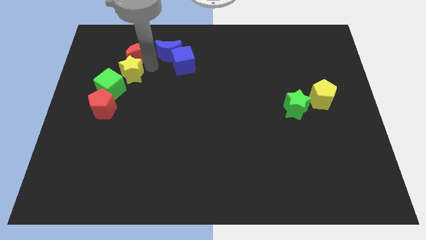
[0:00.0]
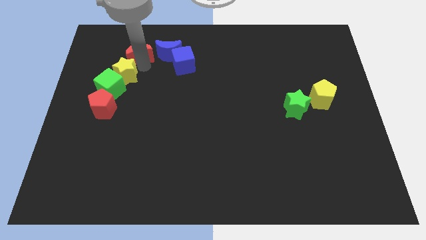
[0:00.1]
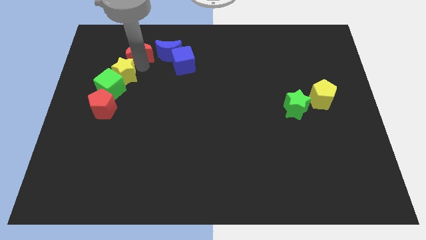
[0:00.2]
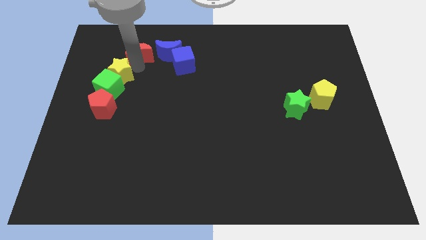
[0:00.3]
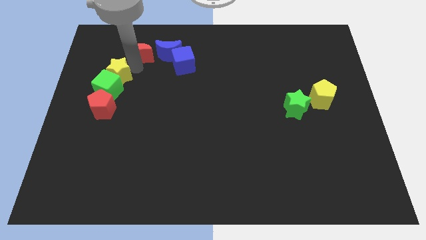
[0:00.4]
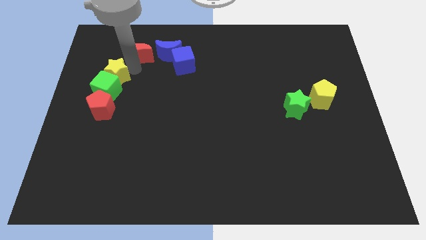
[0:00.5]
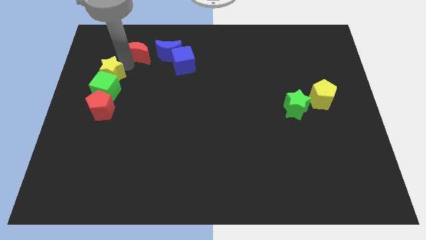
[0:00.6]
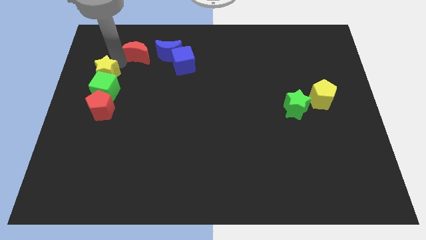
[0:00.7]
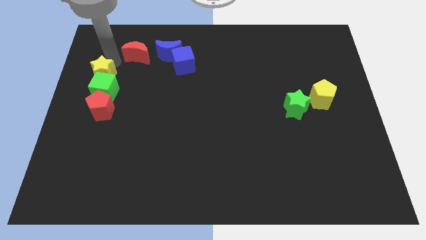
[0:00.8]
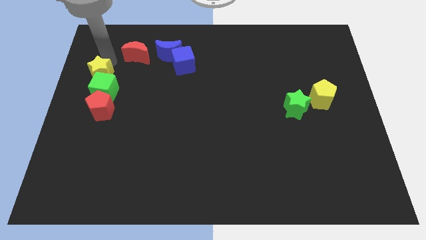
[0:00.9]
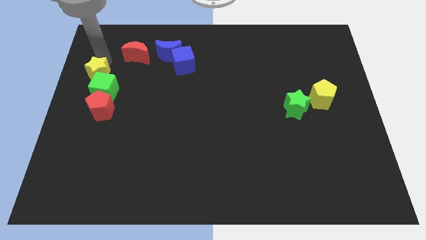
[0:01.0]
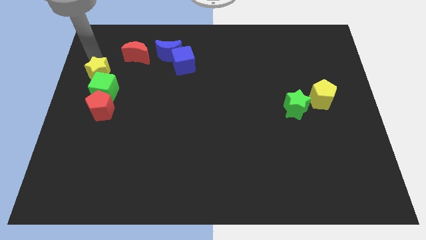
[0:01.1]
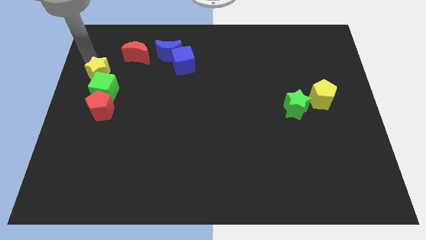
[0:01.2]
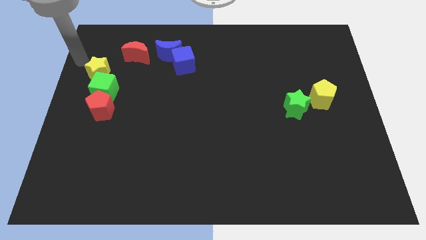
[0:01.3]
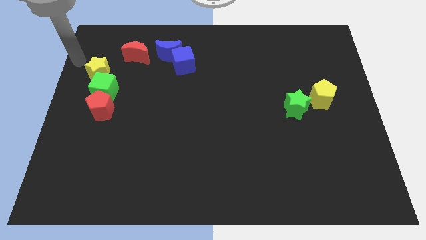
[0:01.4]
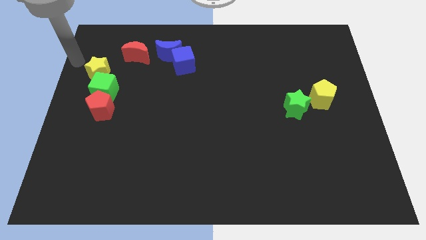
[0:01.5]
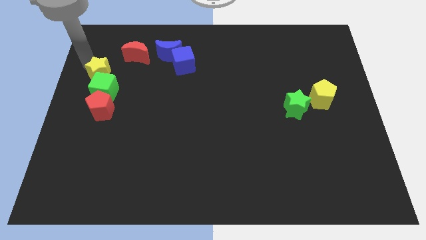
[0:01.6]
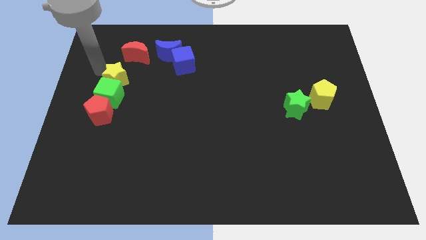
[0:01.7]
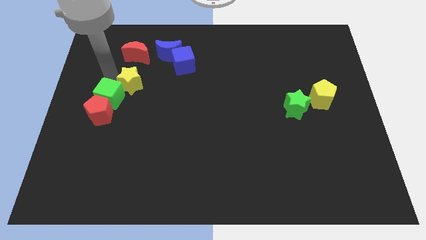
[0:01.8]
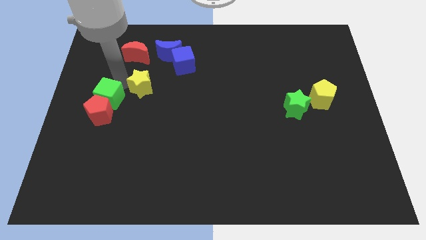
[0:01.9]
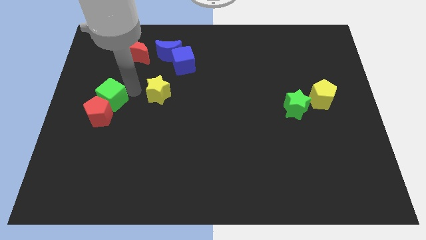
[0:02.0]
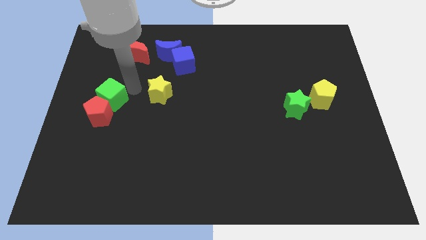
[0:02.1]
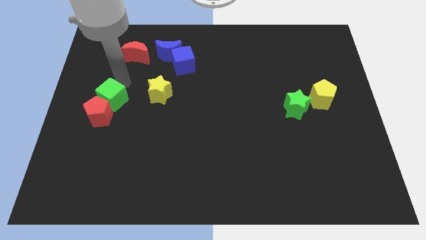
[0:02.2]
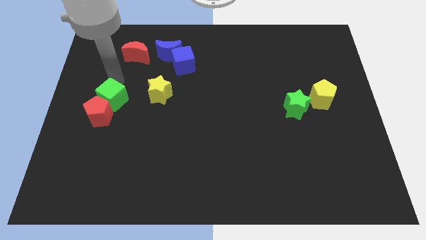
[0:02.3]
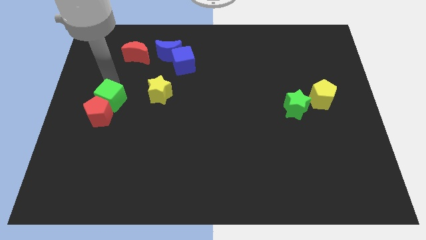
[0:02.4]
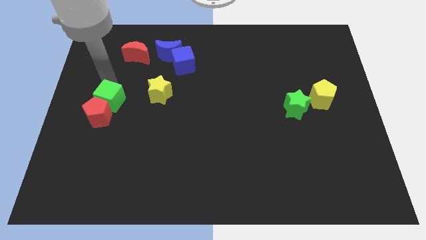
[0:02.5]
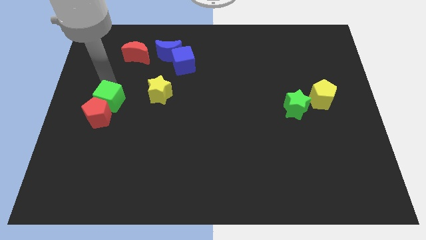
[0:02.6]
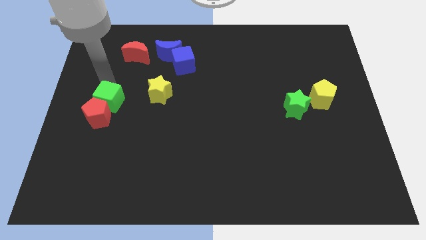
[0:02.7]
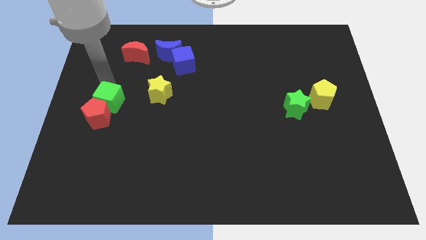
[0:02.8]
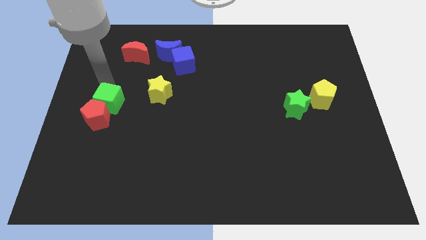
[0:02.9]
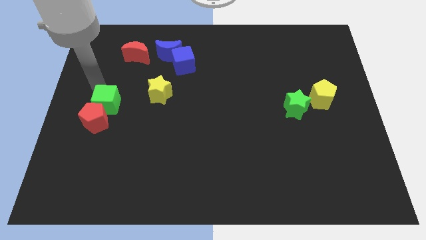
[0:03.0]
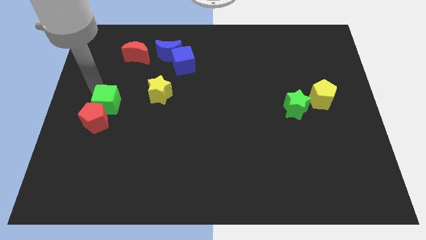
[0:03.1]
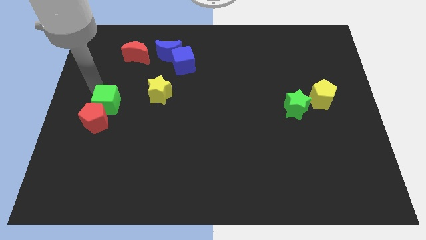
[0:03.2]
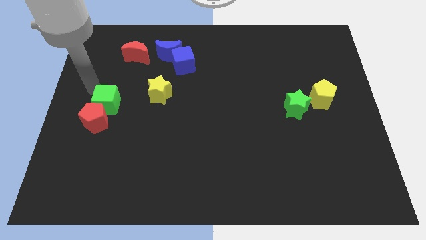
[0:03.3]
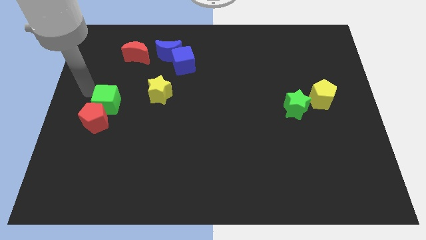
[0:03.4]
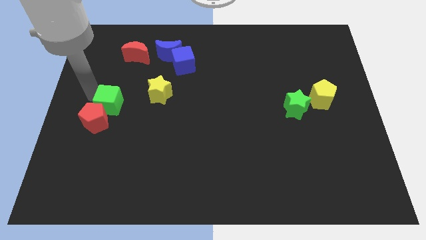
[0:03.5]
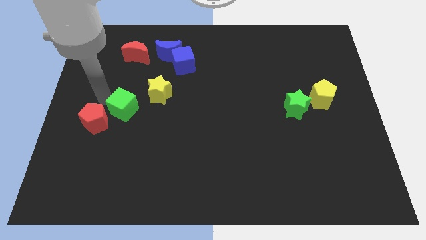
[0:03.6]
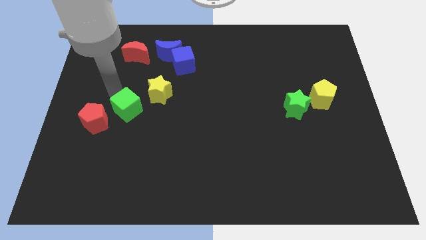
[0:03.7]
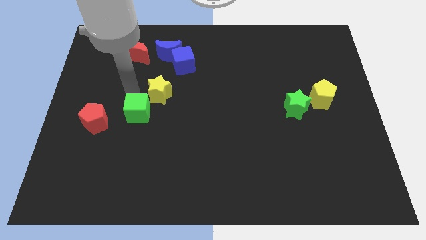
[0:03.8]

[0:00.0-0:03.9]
place the green cube down to the red pentagon

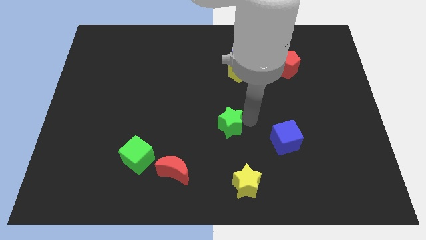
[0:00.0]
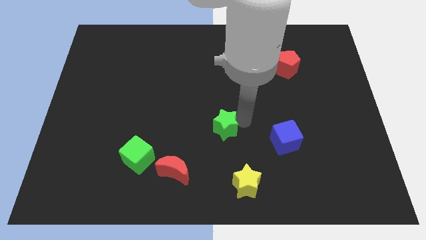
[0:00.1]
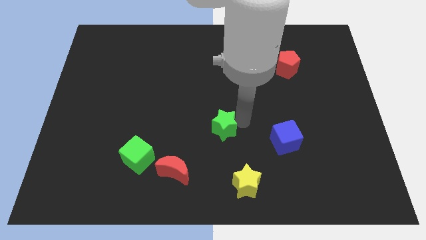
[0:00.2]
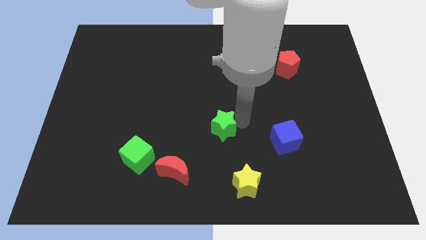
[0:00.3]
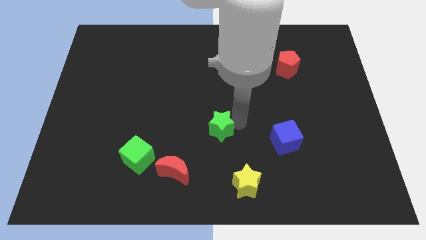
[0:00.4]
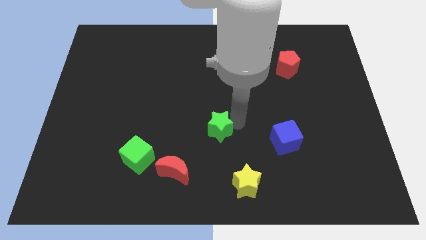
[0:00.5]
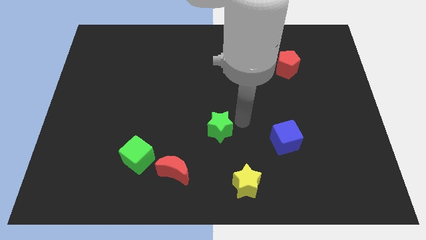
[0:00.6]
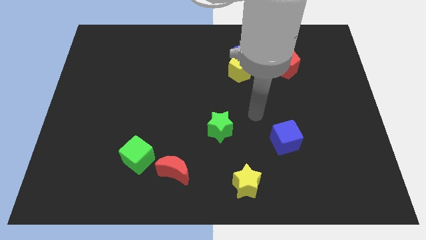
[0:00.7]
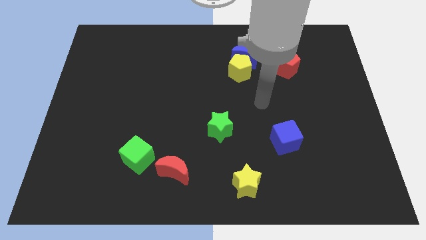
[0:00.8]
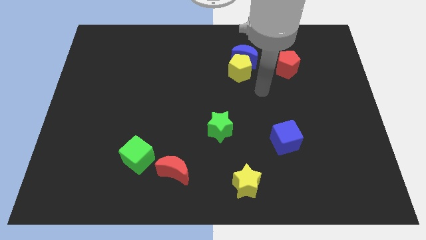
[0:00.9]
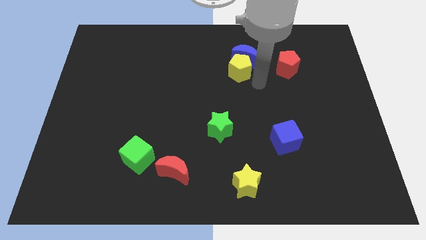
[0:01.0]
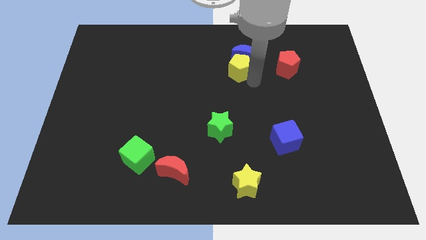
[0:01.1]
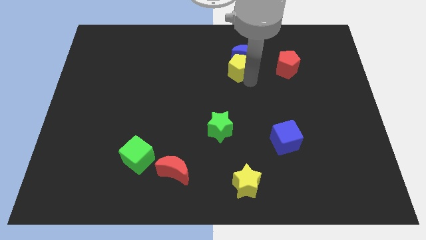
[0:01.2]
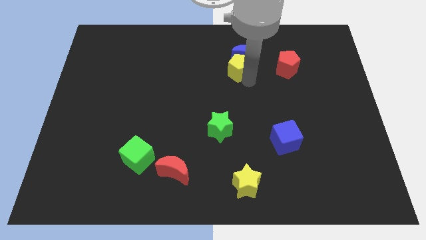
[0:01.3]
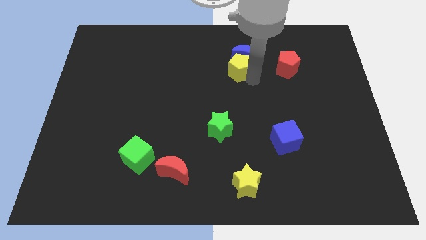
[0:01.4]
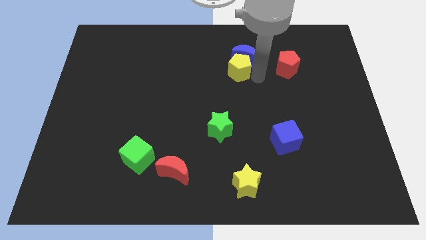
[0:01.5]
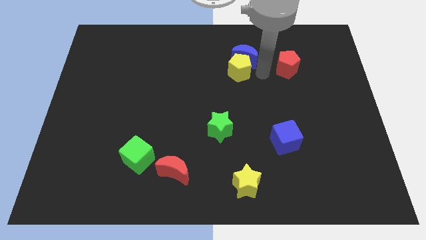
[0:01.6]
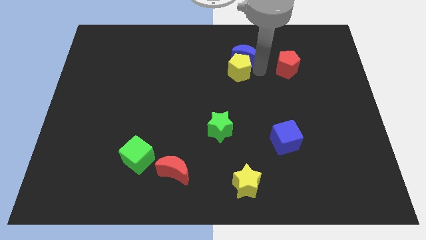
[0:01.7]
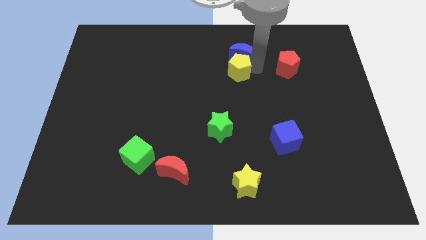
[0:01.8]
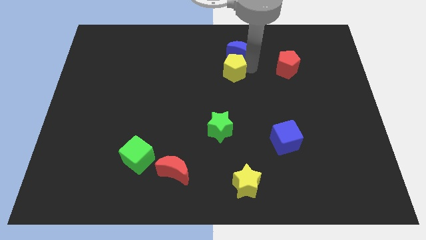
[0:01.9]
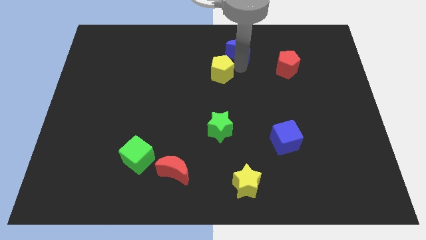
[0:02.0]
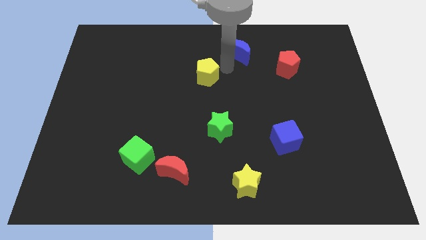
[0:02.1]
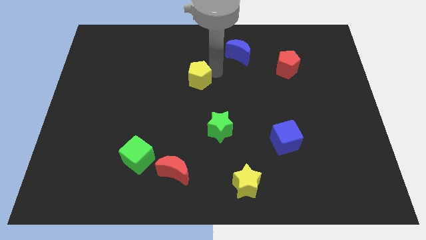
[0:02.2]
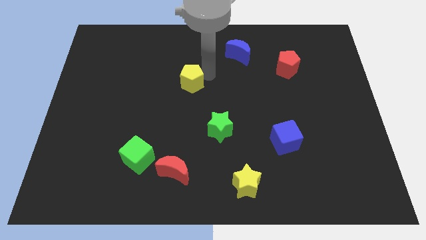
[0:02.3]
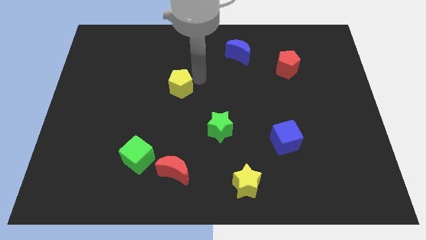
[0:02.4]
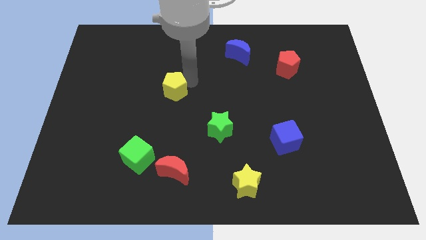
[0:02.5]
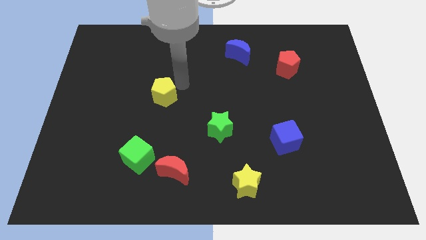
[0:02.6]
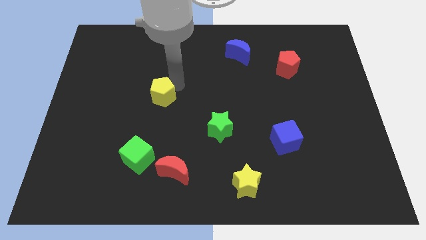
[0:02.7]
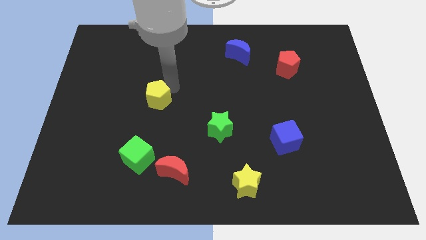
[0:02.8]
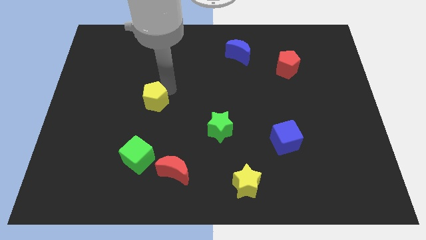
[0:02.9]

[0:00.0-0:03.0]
separate the blue moon and yellow pentagon

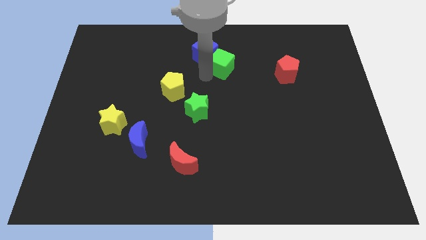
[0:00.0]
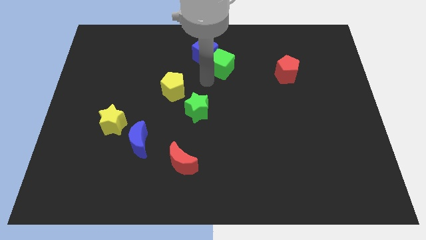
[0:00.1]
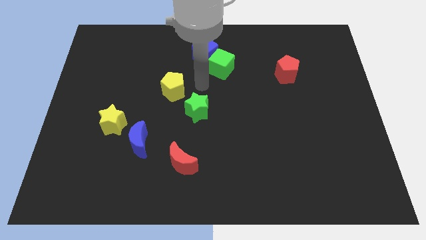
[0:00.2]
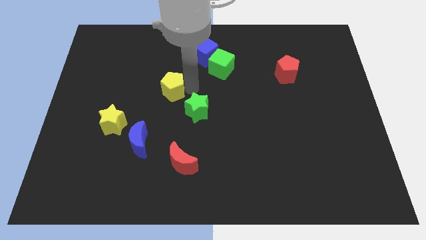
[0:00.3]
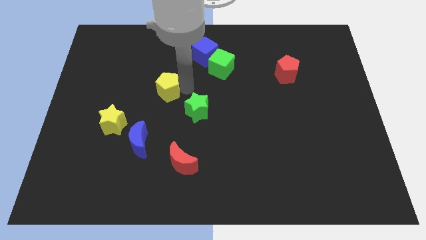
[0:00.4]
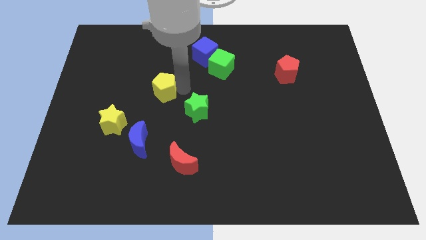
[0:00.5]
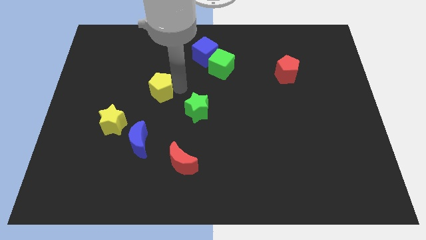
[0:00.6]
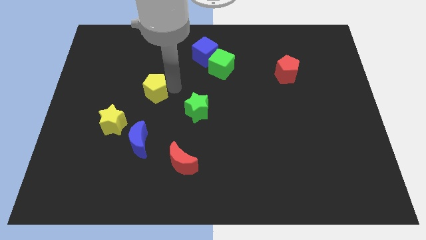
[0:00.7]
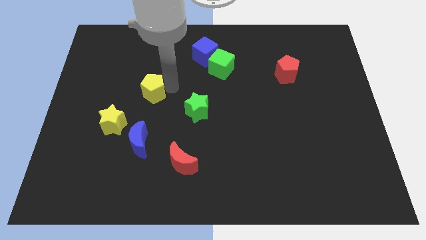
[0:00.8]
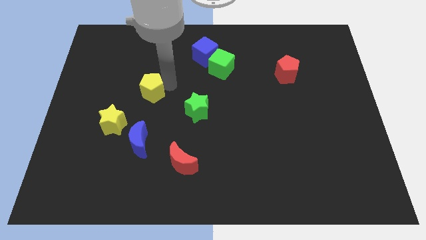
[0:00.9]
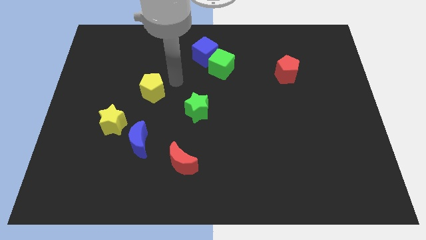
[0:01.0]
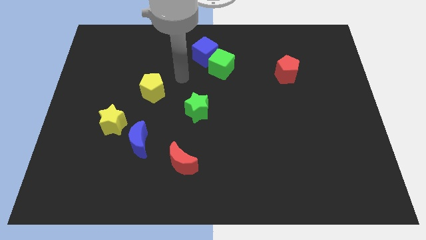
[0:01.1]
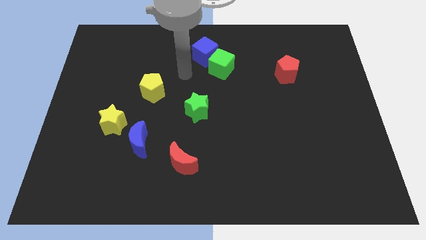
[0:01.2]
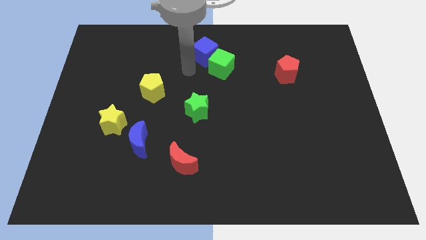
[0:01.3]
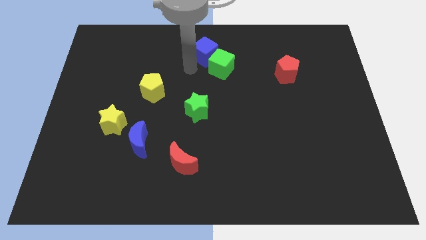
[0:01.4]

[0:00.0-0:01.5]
place the yellow pentagon diagonally on the top right side of the yellow star

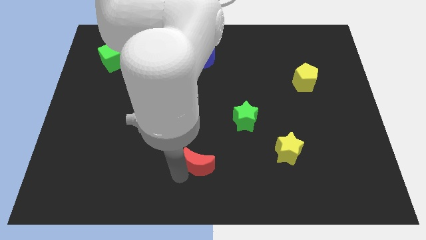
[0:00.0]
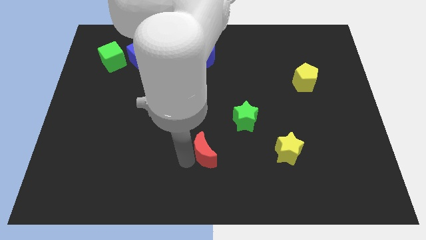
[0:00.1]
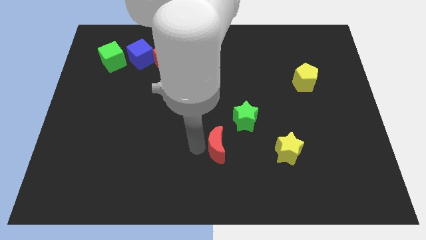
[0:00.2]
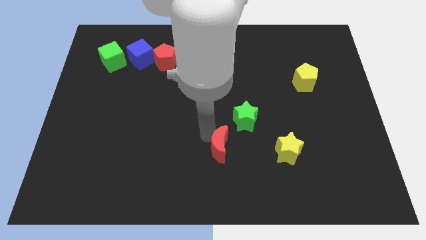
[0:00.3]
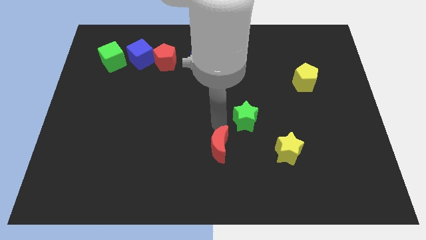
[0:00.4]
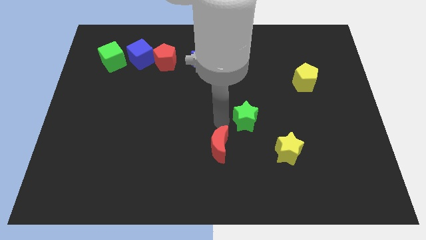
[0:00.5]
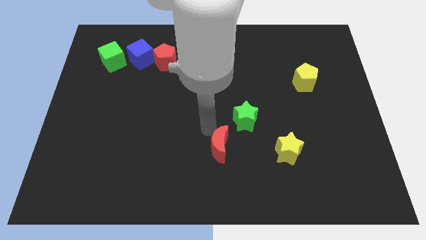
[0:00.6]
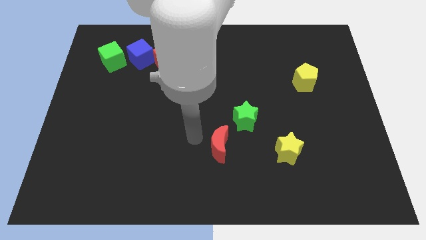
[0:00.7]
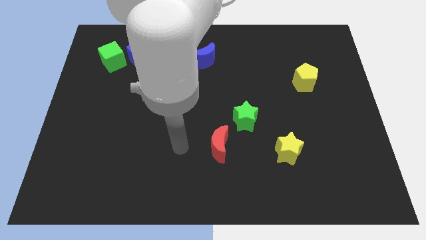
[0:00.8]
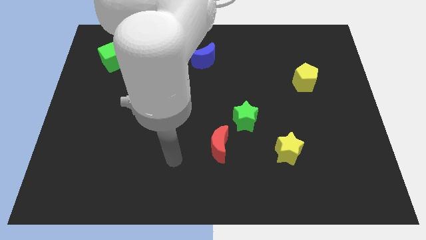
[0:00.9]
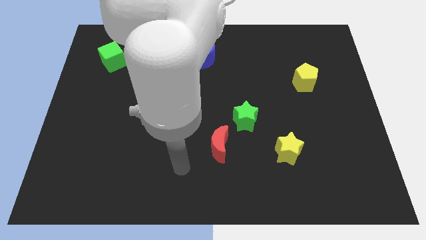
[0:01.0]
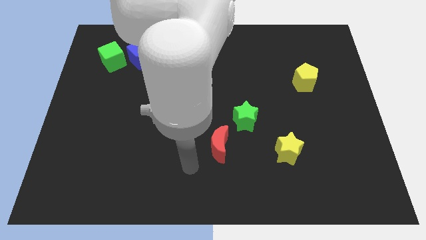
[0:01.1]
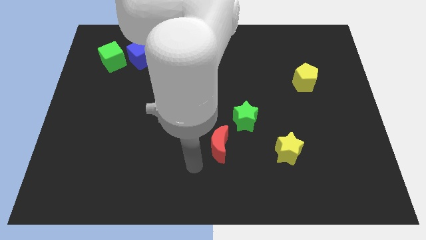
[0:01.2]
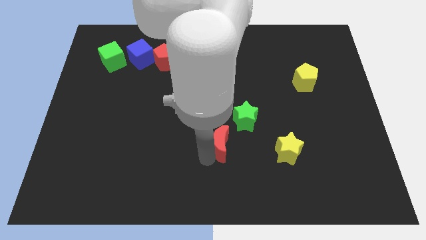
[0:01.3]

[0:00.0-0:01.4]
turn the red moon to the bottom left of yellow star
